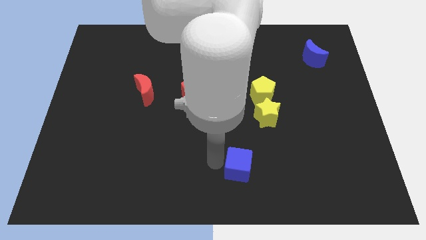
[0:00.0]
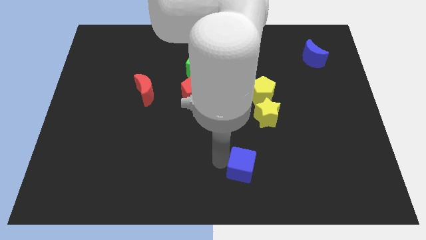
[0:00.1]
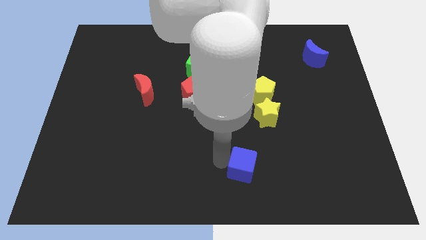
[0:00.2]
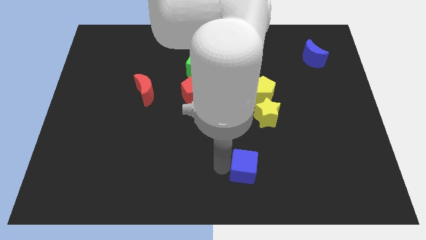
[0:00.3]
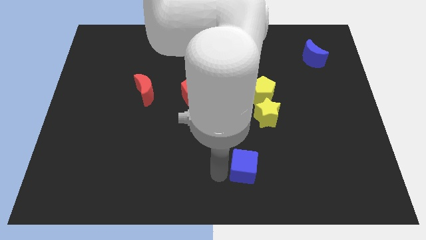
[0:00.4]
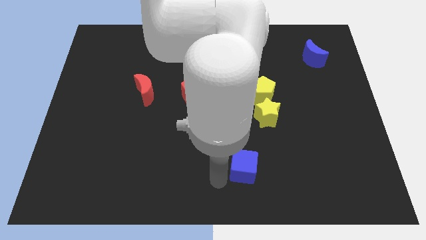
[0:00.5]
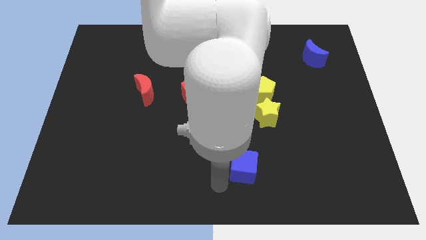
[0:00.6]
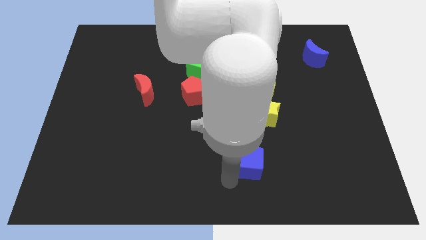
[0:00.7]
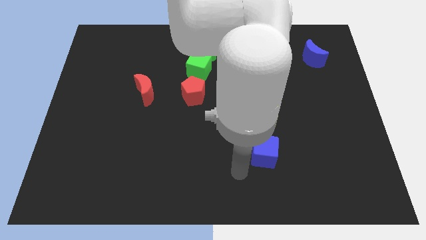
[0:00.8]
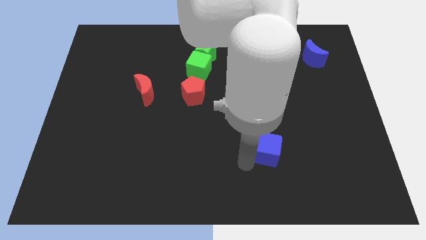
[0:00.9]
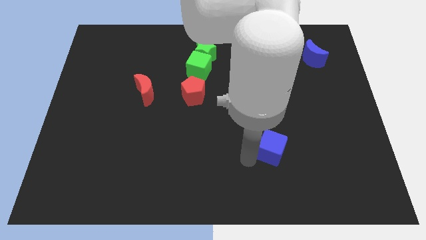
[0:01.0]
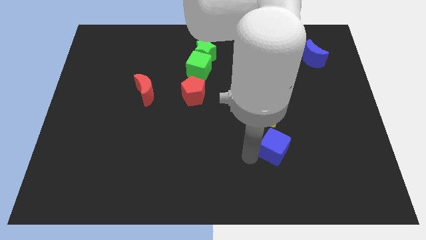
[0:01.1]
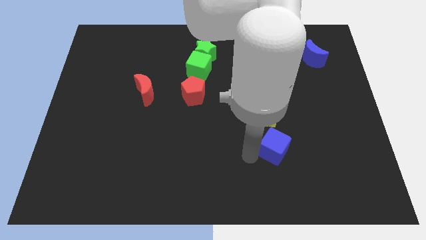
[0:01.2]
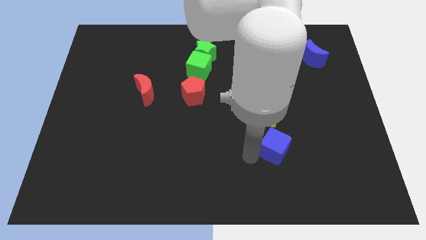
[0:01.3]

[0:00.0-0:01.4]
place the blue cube below the yellow star

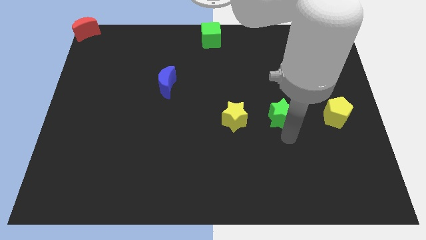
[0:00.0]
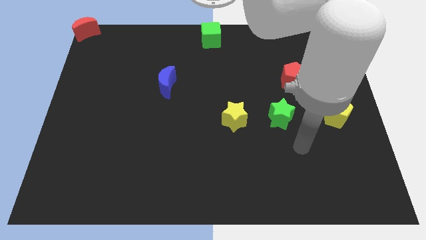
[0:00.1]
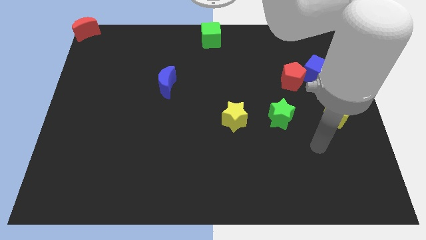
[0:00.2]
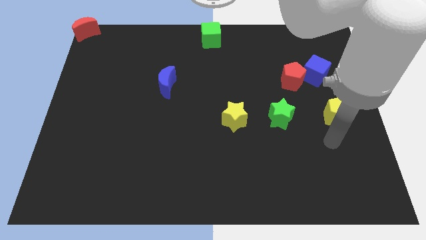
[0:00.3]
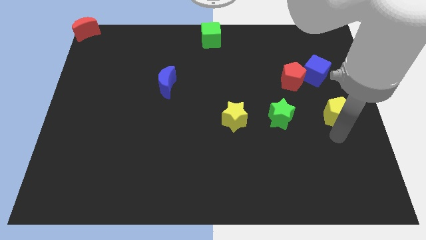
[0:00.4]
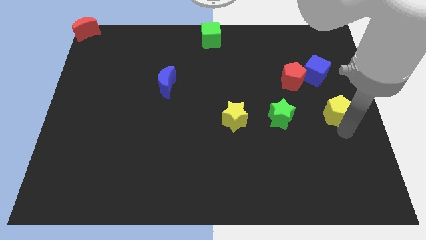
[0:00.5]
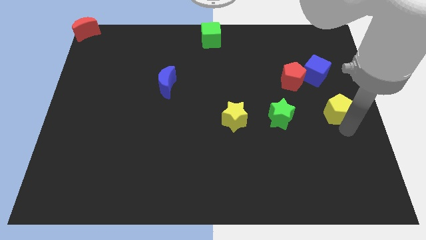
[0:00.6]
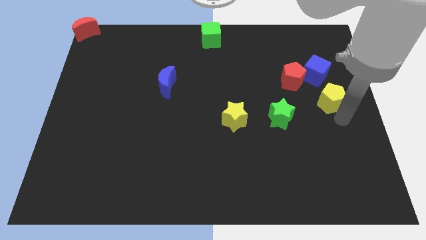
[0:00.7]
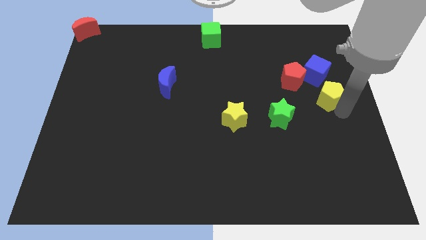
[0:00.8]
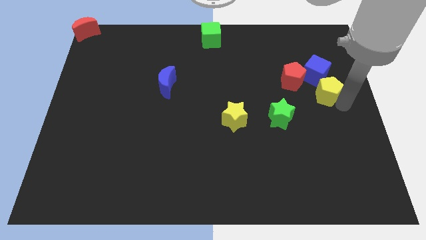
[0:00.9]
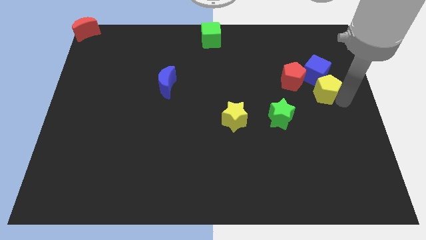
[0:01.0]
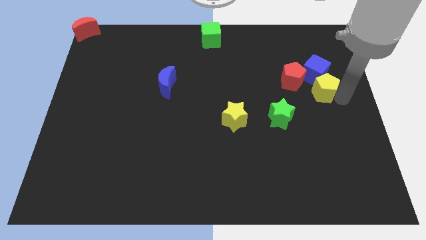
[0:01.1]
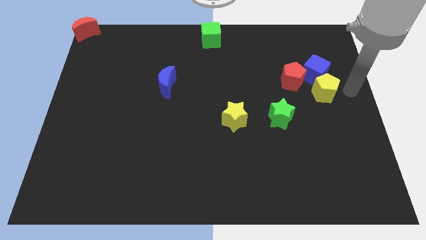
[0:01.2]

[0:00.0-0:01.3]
place the yellow pentagon into the blue cube

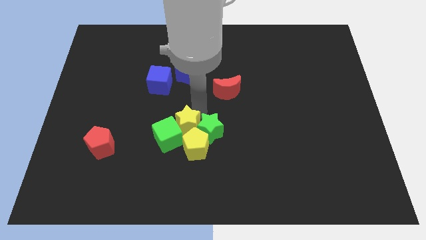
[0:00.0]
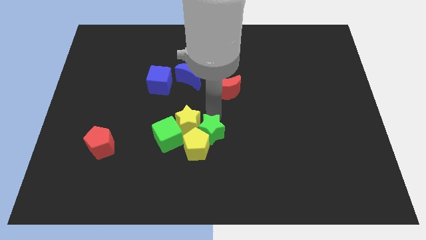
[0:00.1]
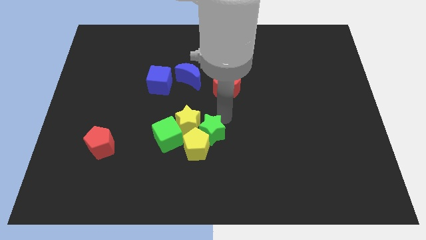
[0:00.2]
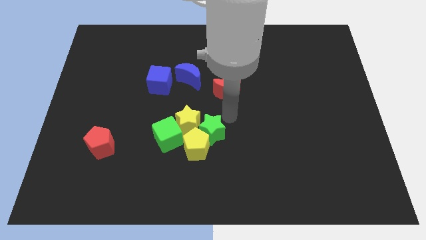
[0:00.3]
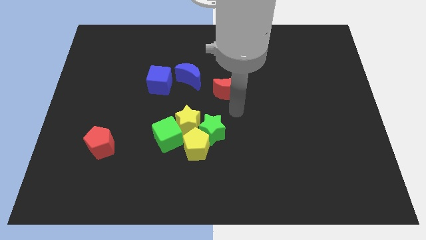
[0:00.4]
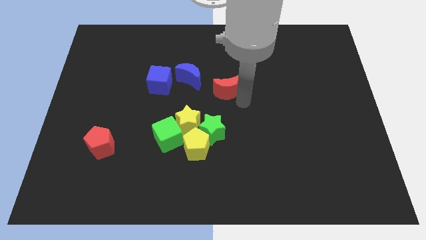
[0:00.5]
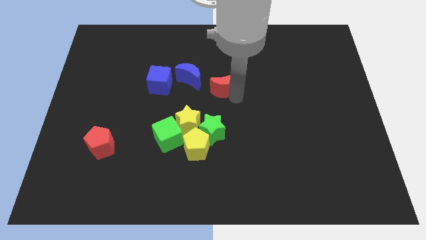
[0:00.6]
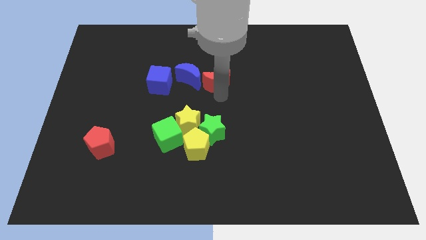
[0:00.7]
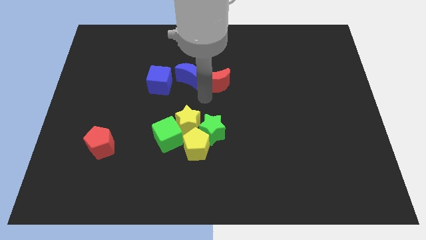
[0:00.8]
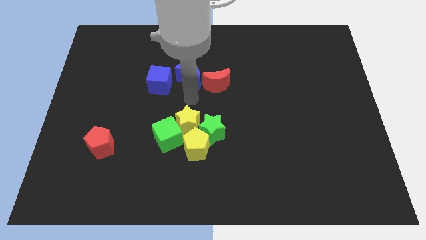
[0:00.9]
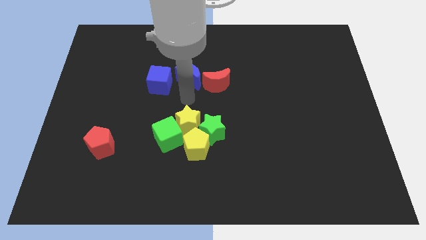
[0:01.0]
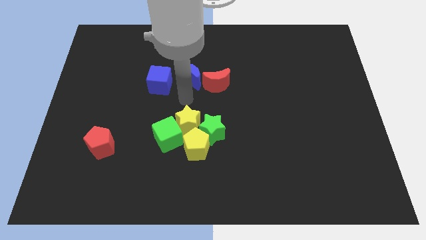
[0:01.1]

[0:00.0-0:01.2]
move red moon to the right of blue moon

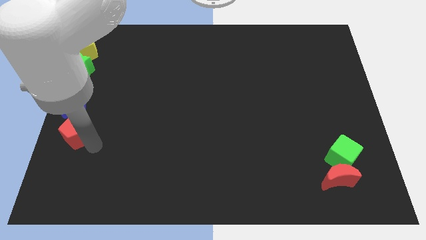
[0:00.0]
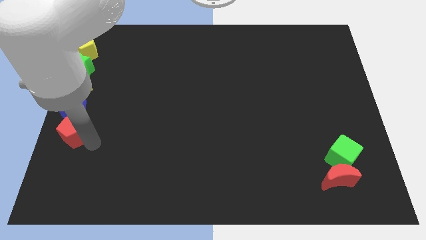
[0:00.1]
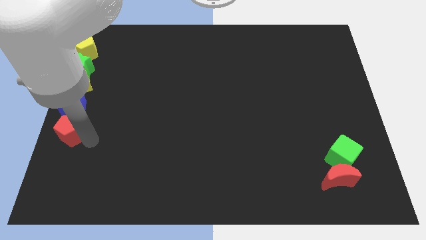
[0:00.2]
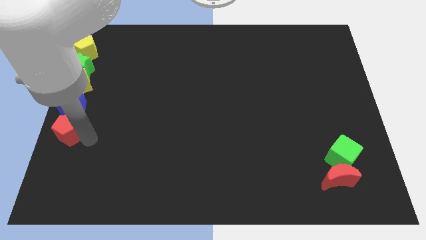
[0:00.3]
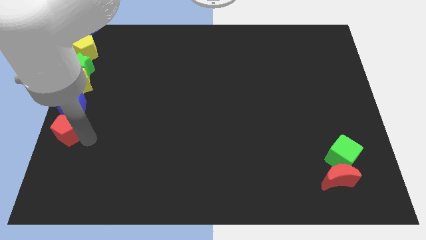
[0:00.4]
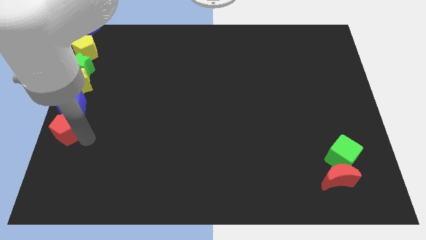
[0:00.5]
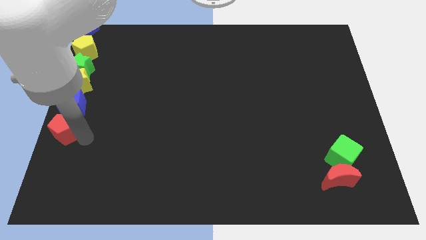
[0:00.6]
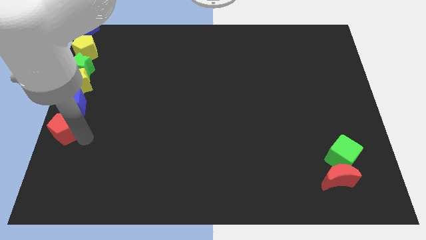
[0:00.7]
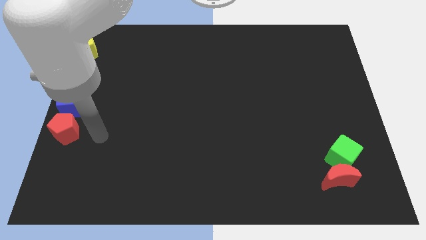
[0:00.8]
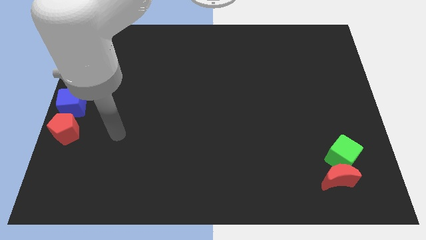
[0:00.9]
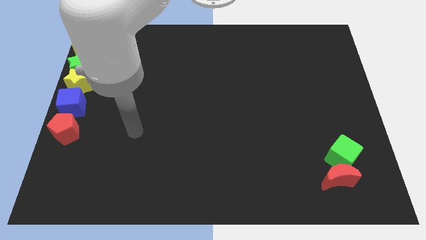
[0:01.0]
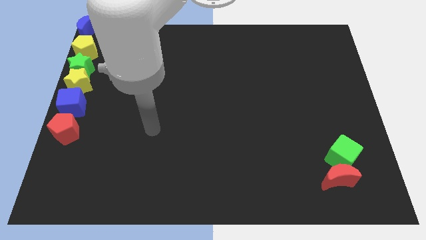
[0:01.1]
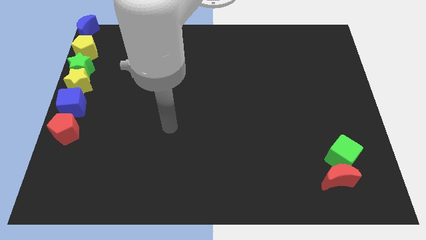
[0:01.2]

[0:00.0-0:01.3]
place the red pentagon below the blue cube to form a vertical line

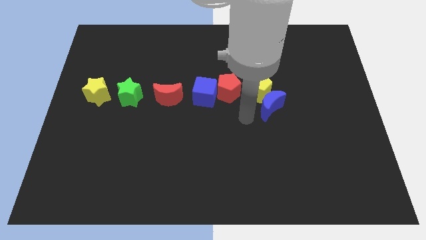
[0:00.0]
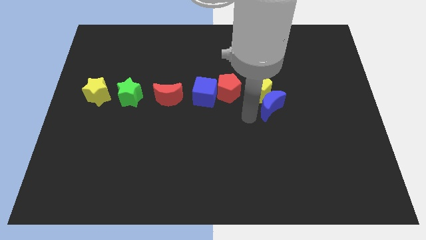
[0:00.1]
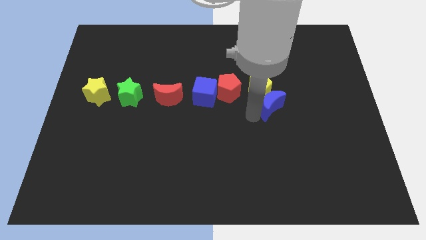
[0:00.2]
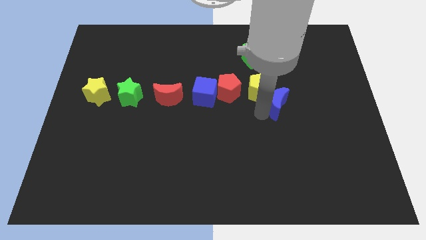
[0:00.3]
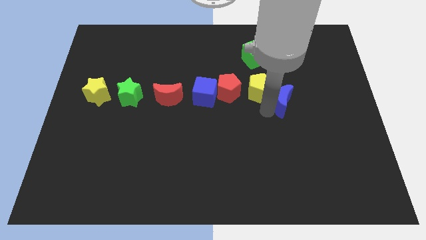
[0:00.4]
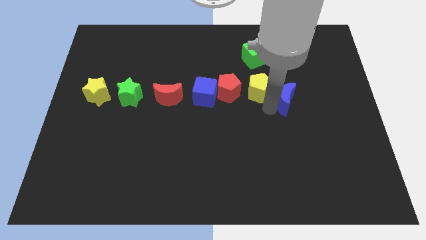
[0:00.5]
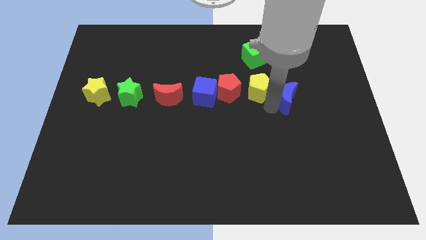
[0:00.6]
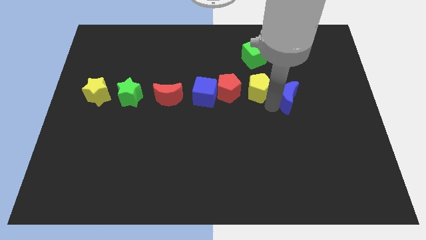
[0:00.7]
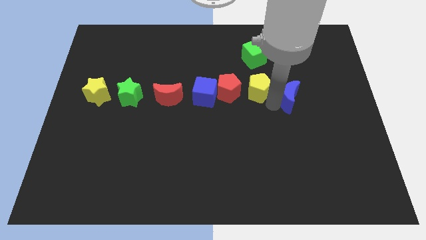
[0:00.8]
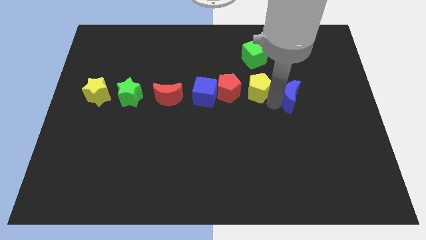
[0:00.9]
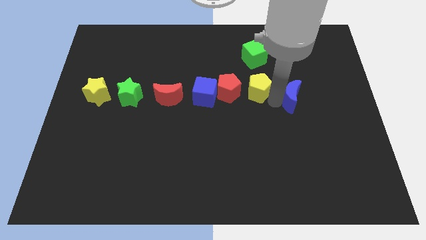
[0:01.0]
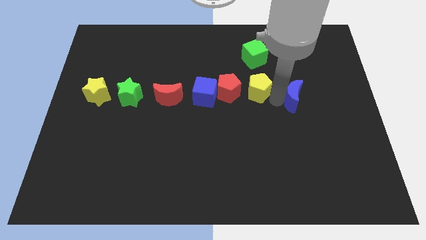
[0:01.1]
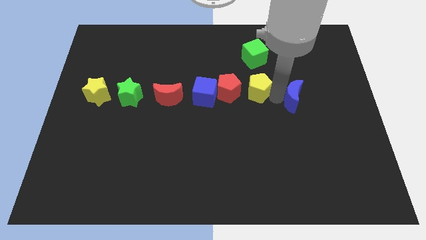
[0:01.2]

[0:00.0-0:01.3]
place blue crescent beside yellow pentagon

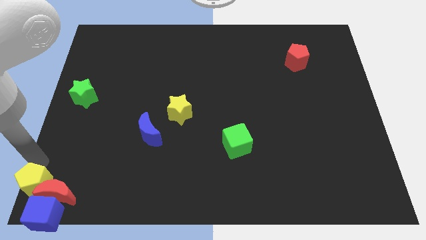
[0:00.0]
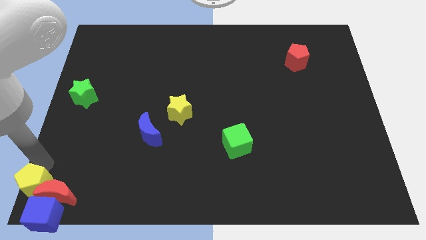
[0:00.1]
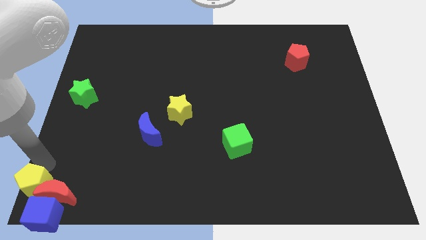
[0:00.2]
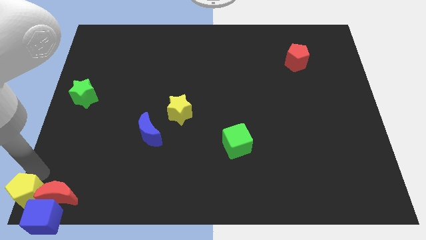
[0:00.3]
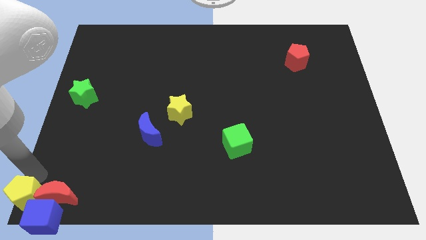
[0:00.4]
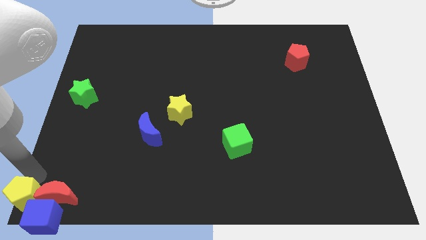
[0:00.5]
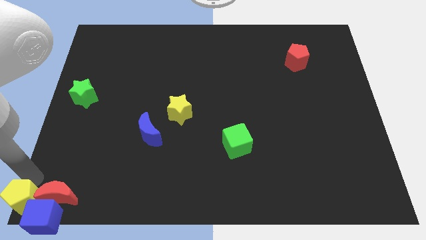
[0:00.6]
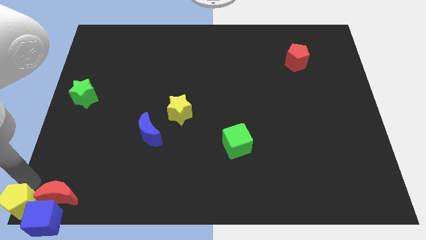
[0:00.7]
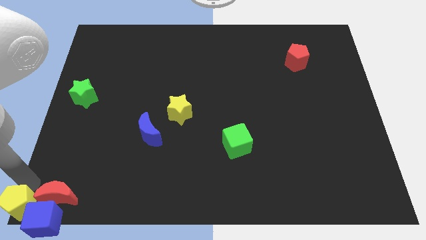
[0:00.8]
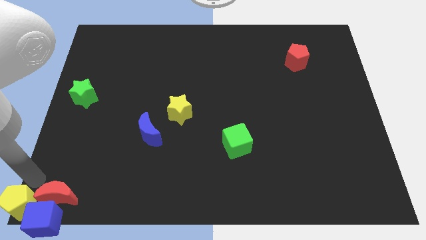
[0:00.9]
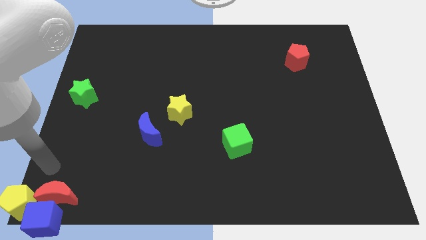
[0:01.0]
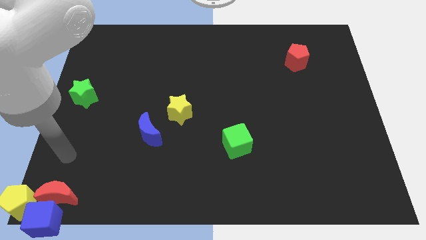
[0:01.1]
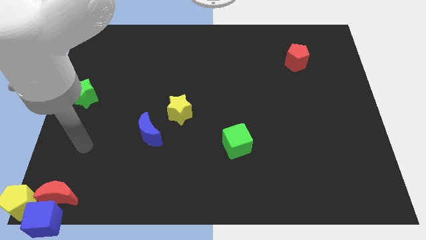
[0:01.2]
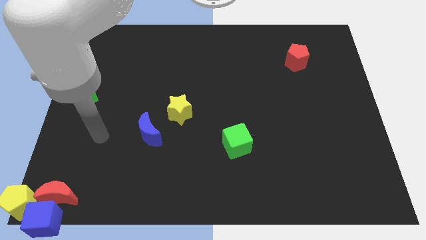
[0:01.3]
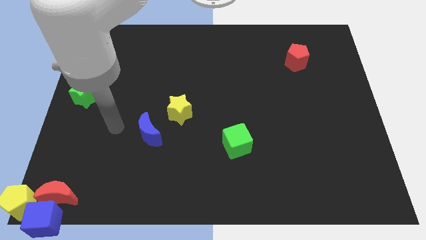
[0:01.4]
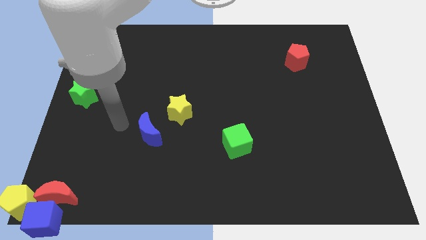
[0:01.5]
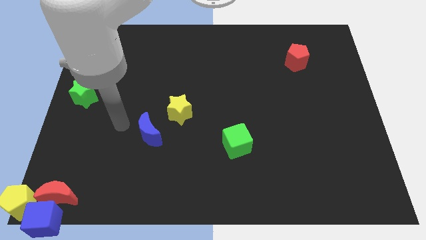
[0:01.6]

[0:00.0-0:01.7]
move your arm away from the yellow pentagon

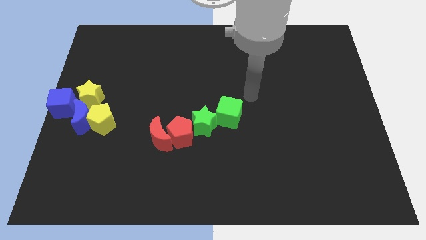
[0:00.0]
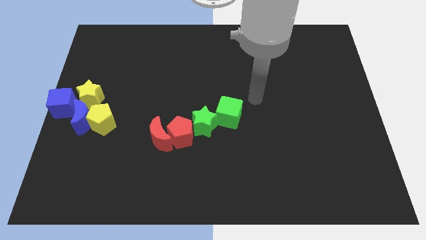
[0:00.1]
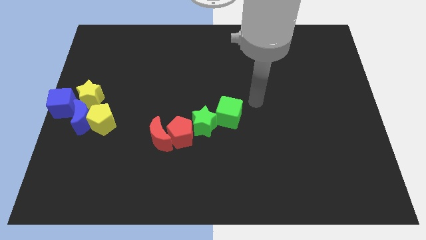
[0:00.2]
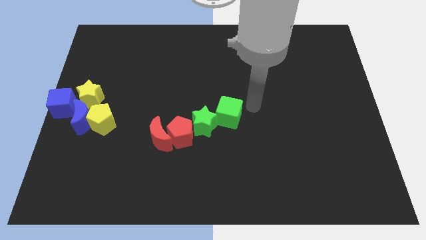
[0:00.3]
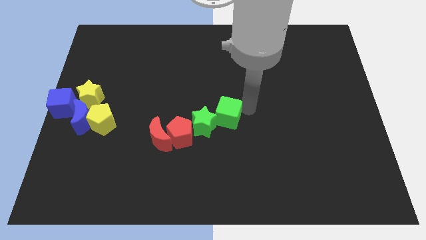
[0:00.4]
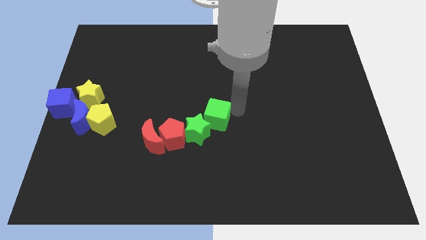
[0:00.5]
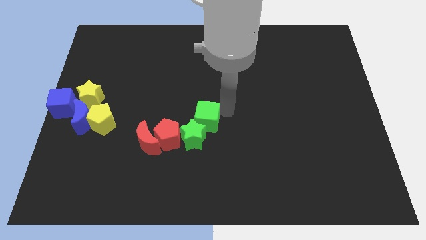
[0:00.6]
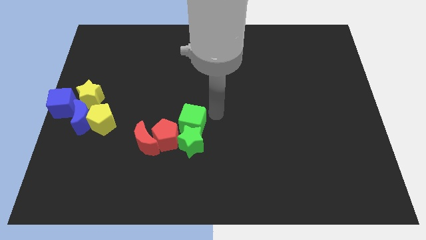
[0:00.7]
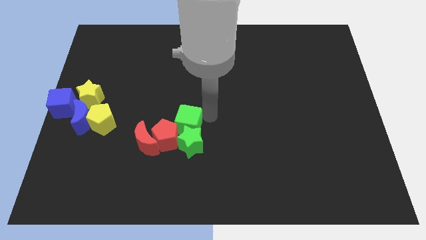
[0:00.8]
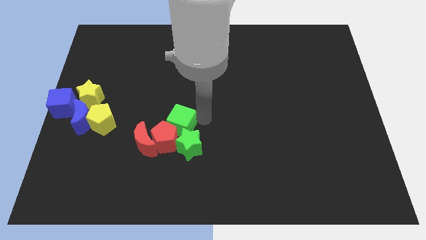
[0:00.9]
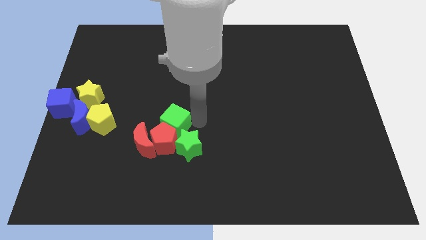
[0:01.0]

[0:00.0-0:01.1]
push green blocks into red blocks
